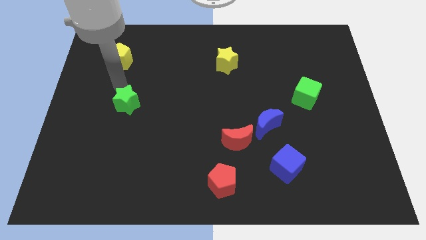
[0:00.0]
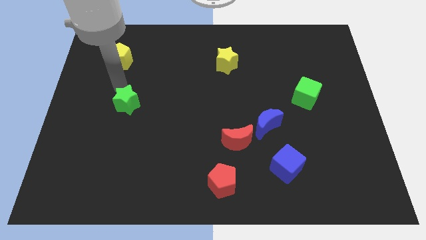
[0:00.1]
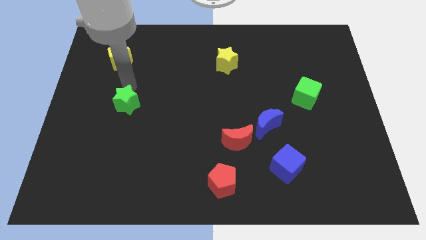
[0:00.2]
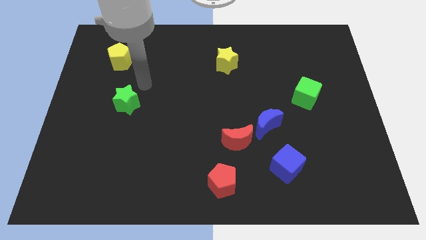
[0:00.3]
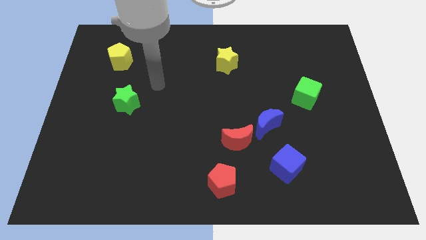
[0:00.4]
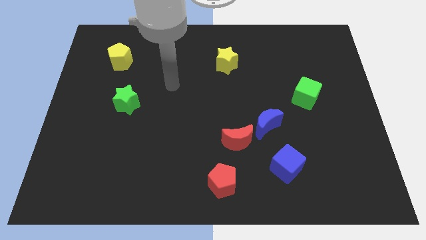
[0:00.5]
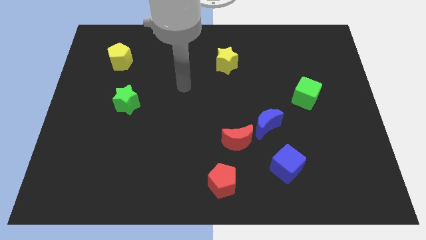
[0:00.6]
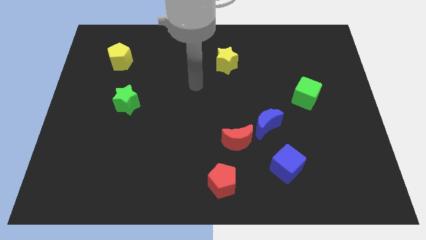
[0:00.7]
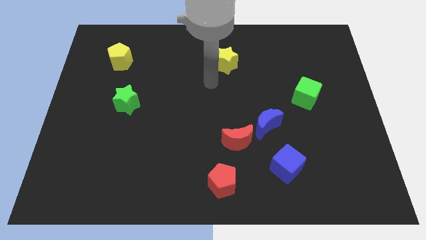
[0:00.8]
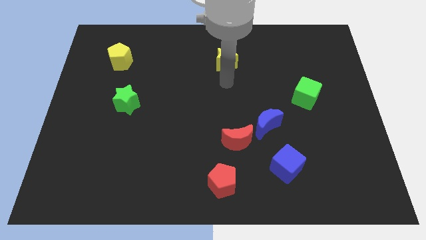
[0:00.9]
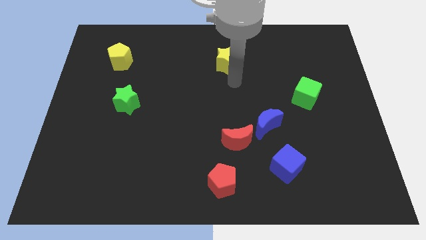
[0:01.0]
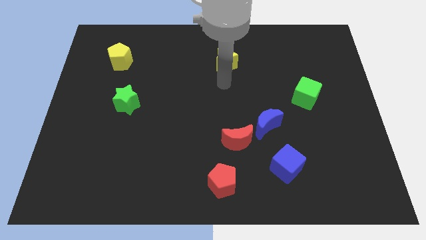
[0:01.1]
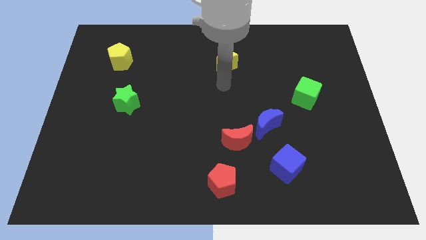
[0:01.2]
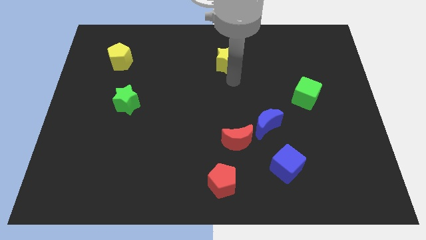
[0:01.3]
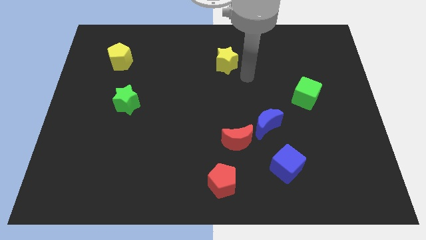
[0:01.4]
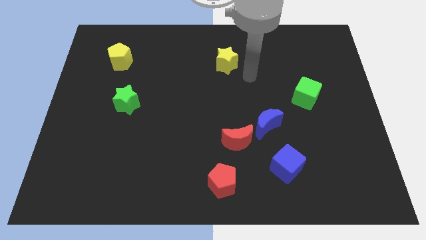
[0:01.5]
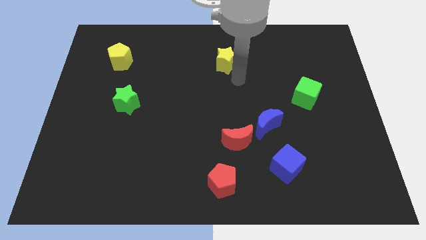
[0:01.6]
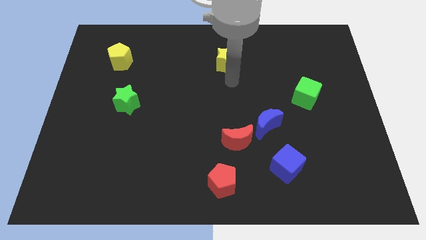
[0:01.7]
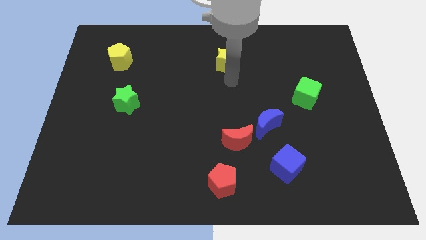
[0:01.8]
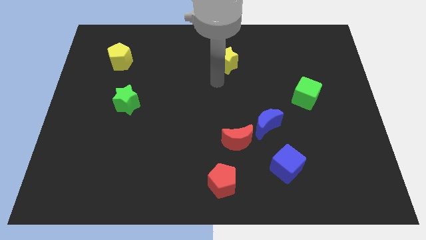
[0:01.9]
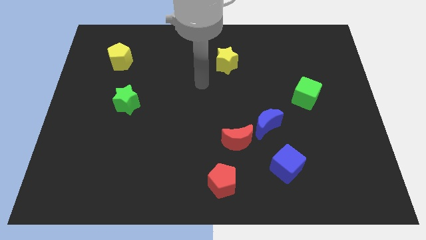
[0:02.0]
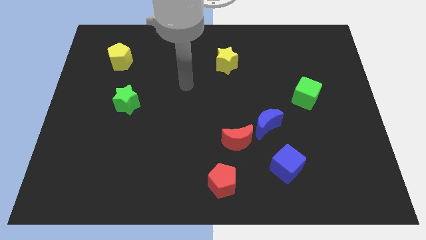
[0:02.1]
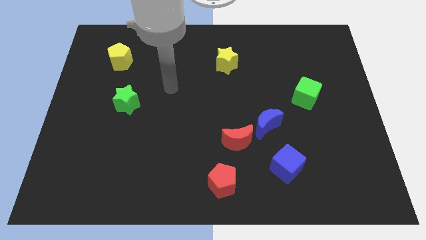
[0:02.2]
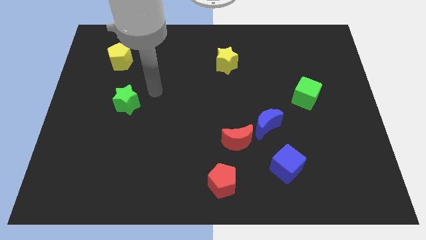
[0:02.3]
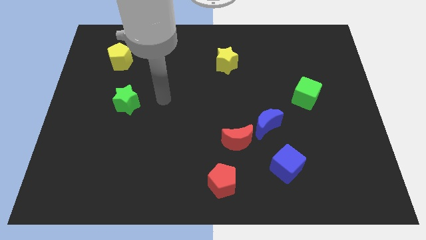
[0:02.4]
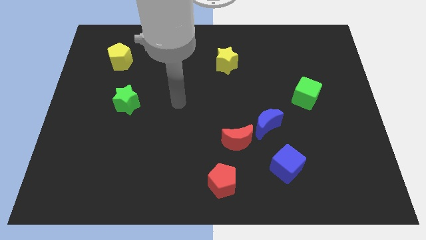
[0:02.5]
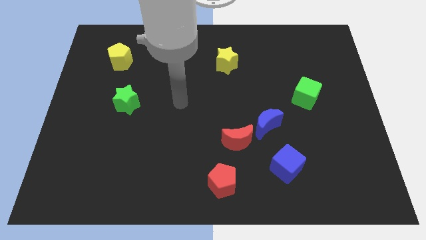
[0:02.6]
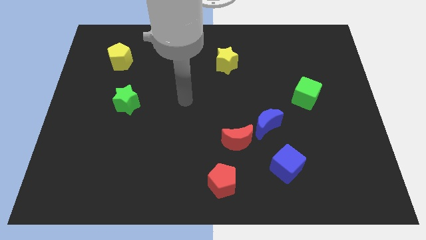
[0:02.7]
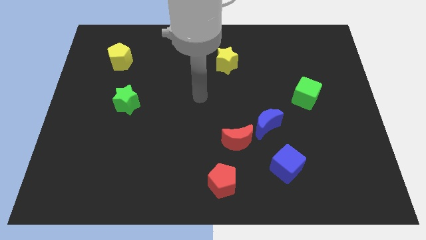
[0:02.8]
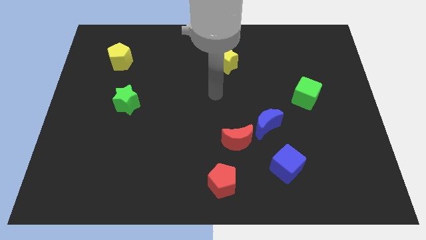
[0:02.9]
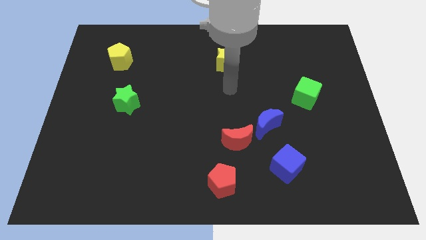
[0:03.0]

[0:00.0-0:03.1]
move the arm from the left center to center of the board

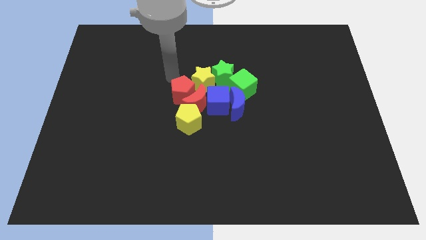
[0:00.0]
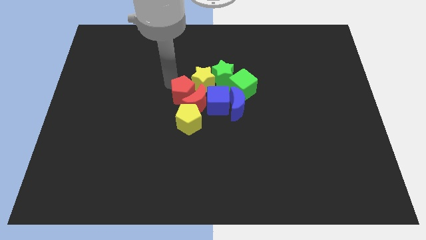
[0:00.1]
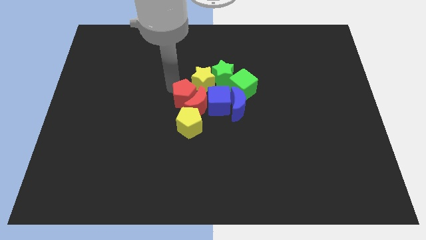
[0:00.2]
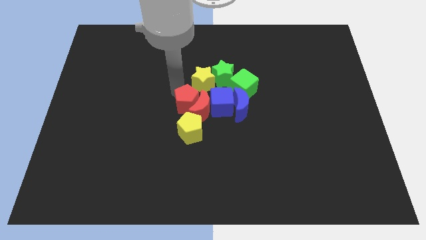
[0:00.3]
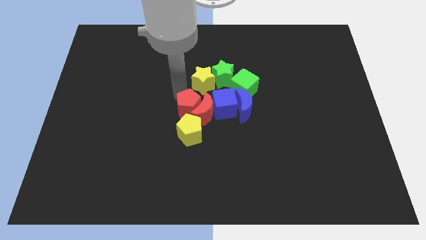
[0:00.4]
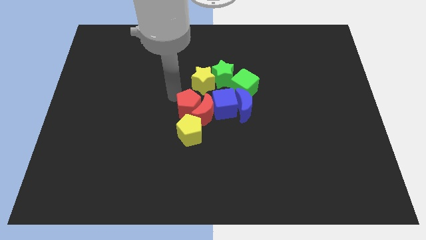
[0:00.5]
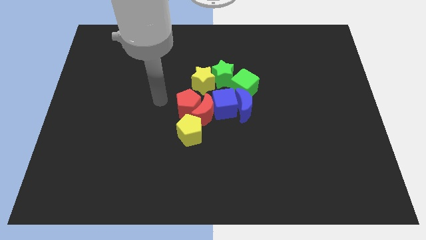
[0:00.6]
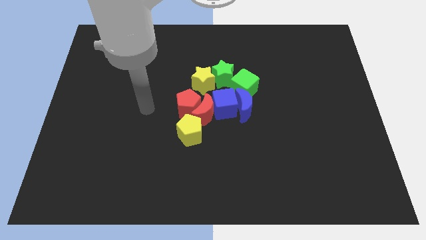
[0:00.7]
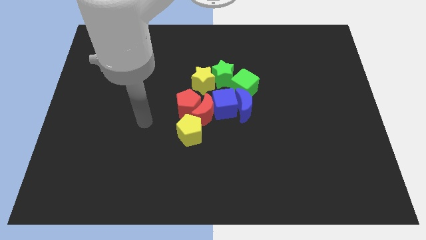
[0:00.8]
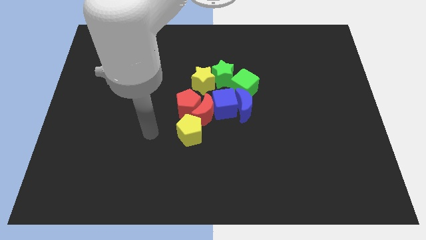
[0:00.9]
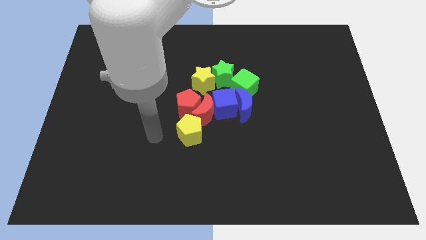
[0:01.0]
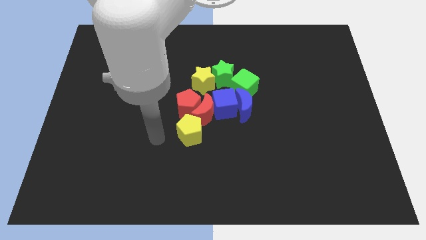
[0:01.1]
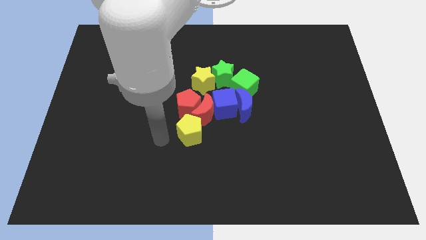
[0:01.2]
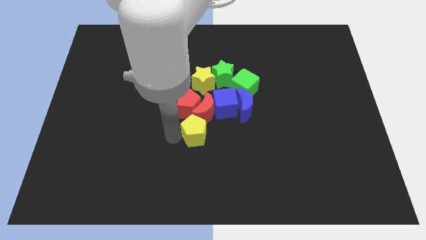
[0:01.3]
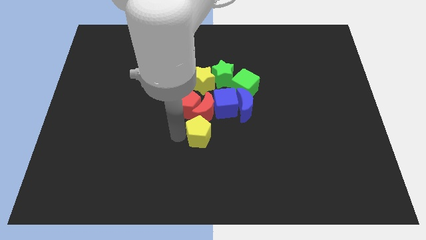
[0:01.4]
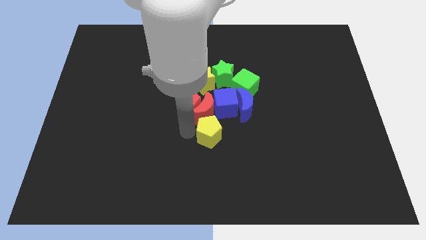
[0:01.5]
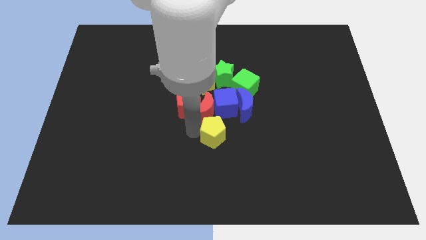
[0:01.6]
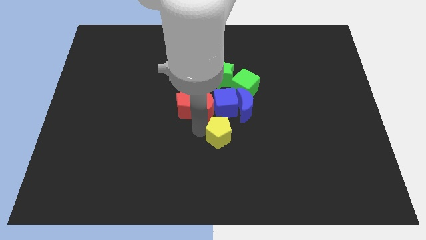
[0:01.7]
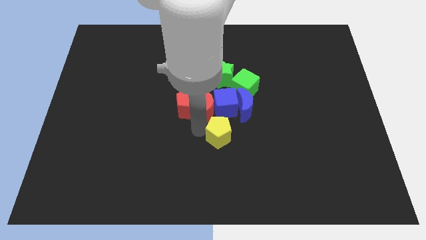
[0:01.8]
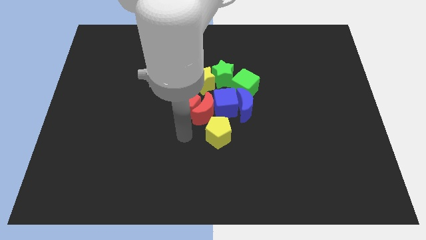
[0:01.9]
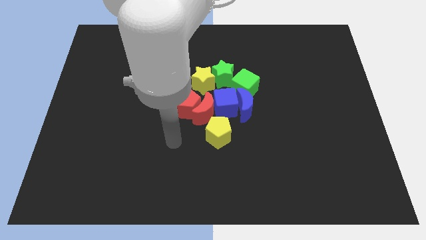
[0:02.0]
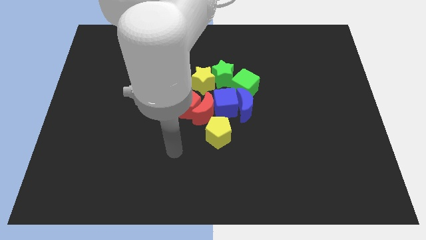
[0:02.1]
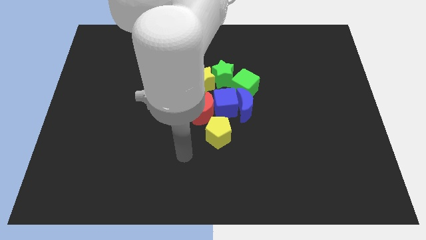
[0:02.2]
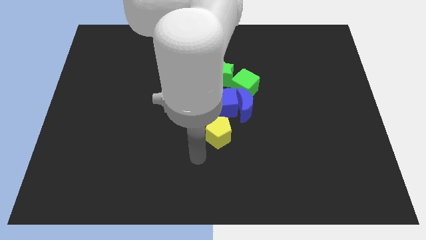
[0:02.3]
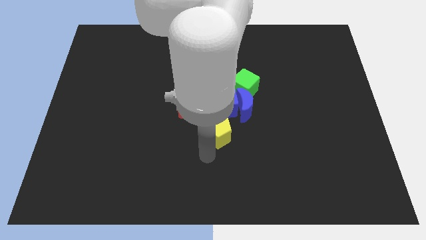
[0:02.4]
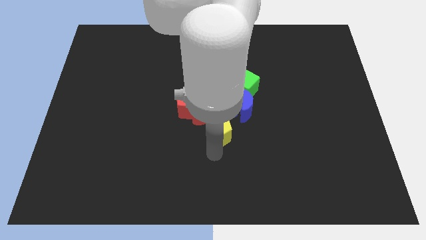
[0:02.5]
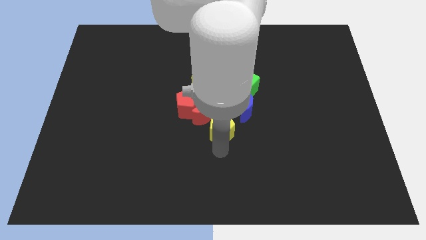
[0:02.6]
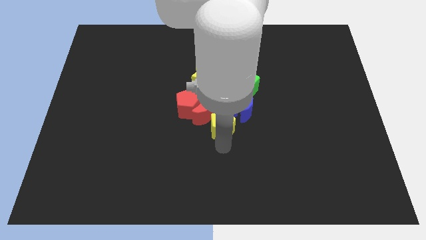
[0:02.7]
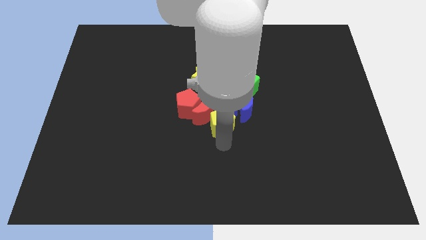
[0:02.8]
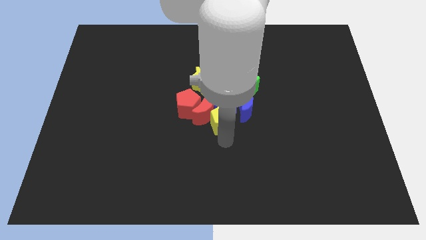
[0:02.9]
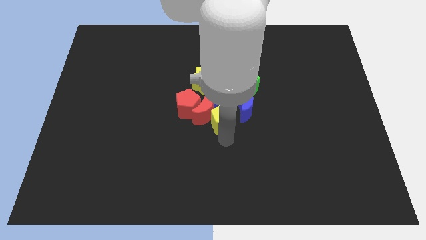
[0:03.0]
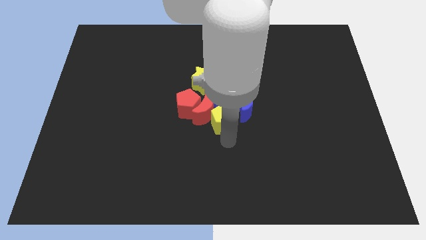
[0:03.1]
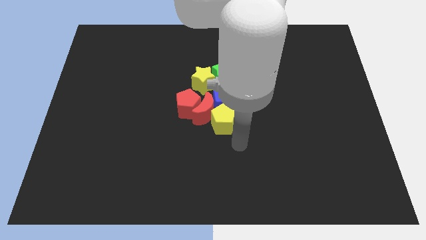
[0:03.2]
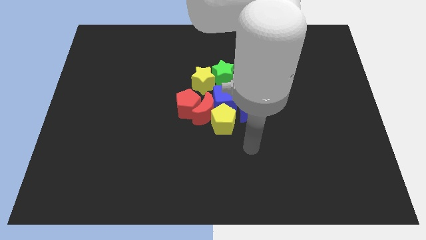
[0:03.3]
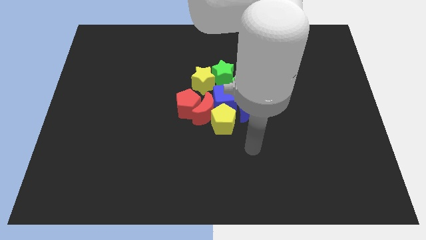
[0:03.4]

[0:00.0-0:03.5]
move the yellow pentagon to the bottom of blue cube

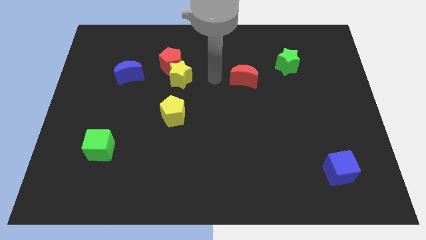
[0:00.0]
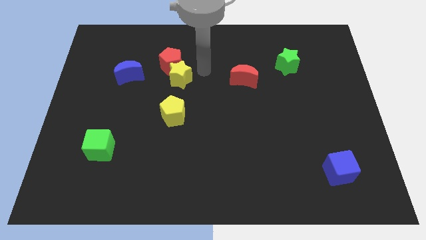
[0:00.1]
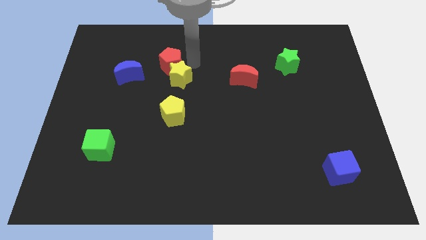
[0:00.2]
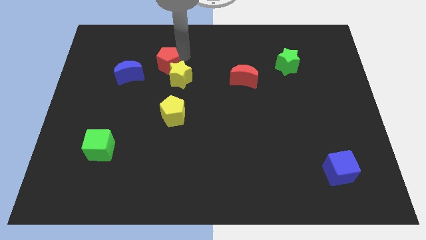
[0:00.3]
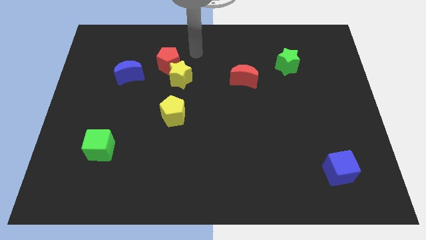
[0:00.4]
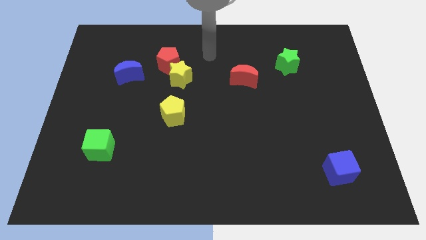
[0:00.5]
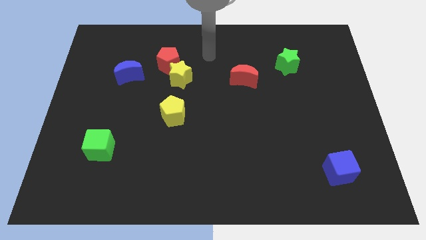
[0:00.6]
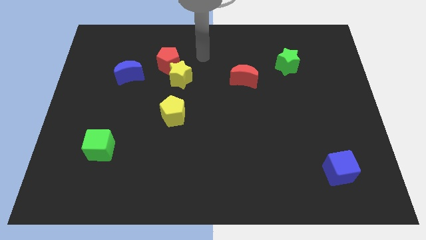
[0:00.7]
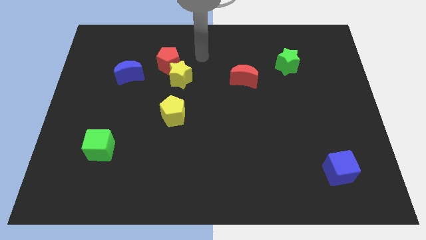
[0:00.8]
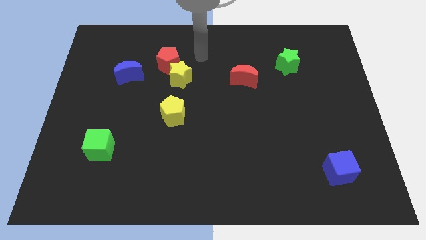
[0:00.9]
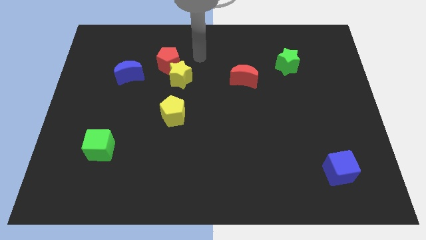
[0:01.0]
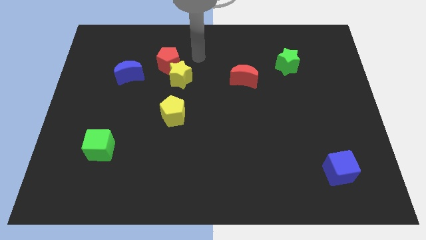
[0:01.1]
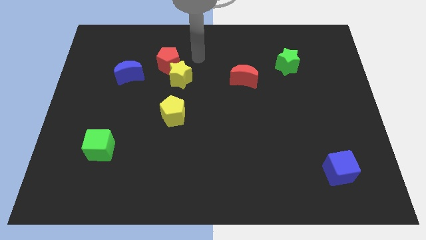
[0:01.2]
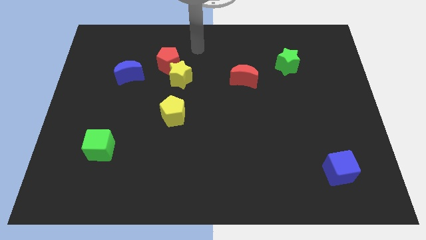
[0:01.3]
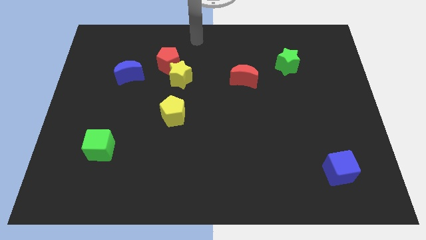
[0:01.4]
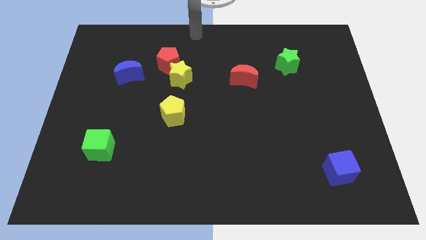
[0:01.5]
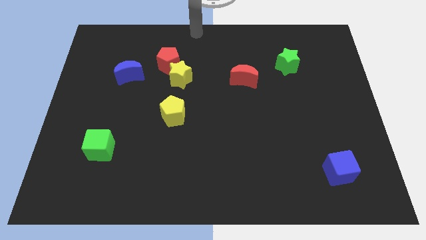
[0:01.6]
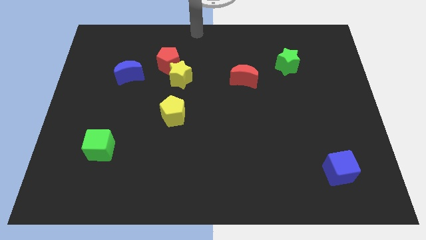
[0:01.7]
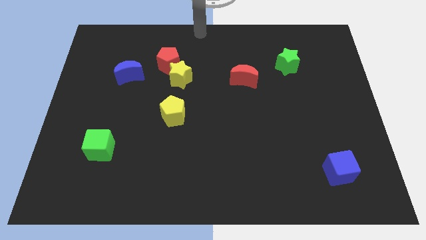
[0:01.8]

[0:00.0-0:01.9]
tap the red pentagon

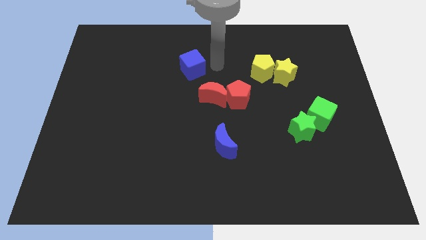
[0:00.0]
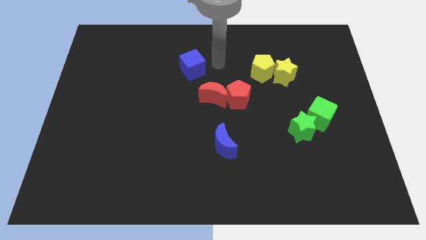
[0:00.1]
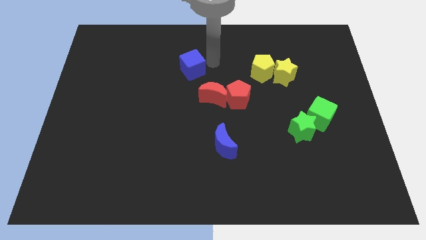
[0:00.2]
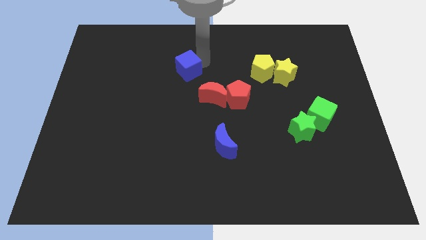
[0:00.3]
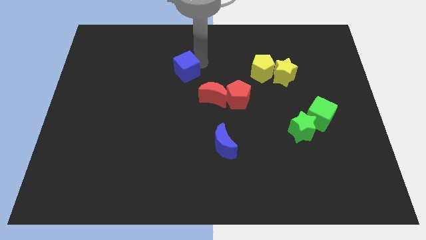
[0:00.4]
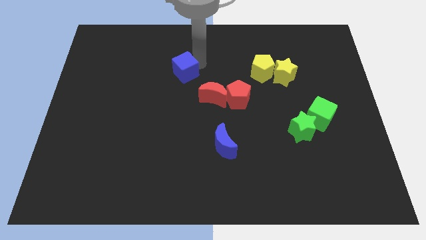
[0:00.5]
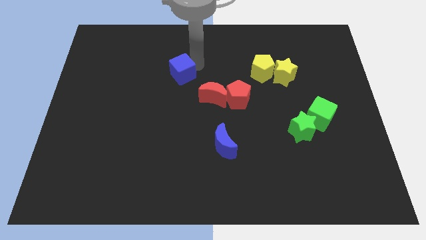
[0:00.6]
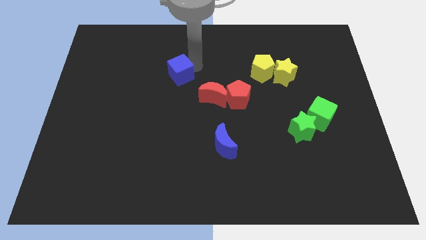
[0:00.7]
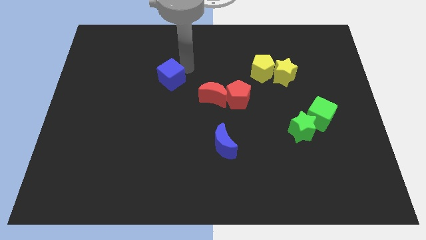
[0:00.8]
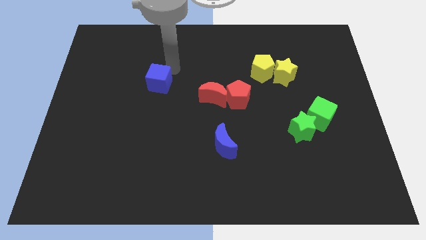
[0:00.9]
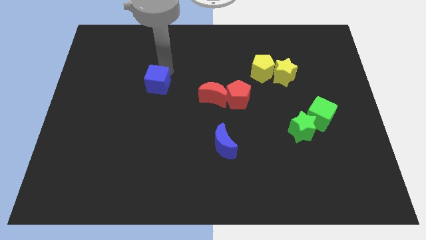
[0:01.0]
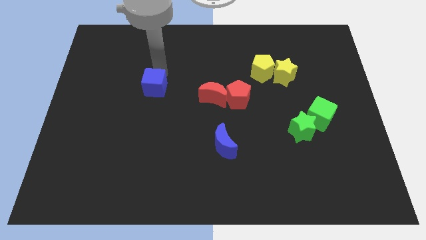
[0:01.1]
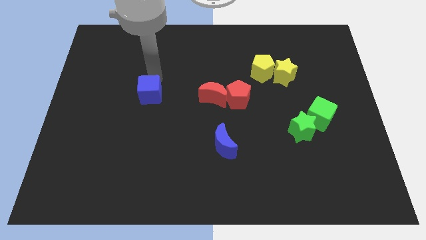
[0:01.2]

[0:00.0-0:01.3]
place the blue cube parallel to red moon
